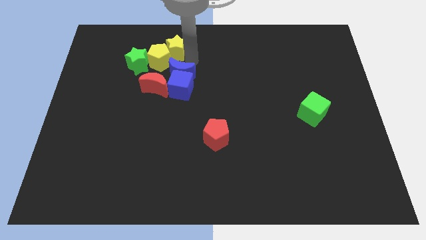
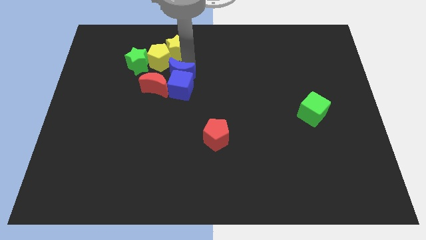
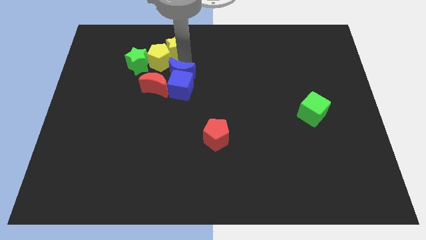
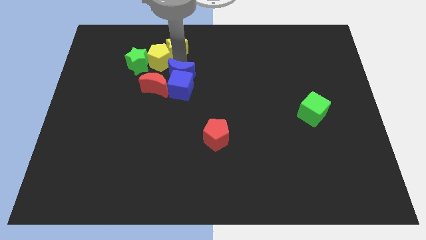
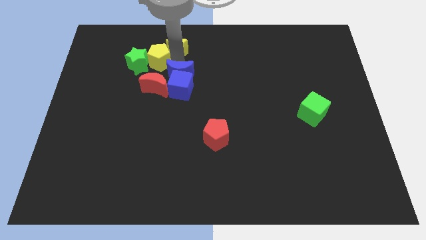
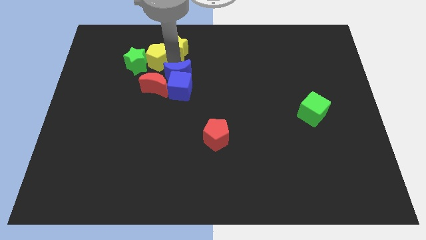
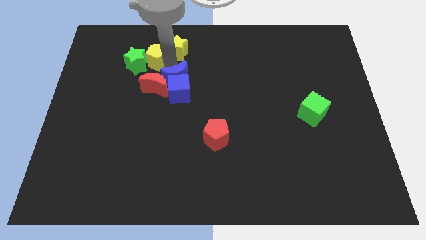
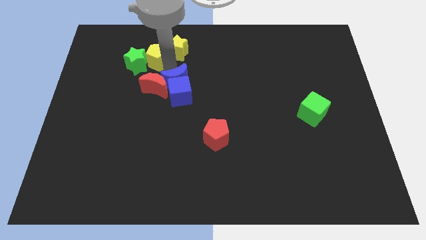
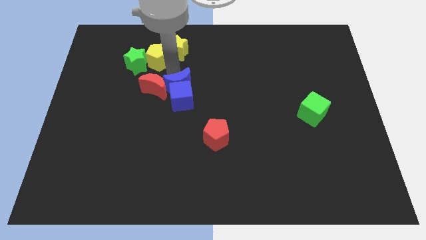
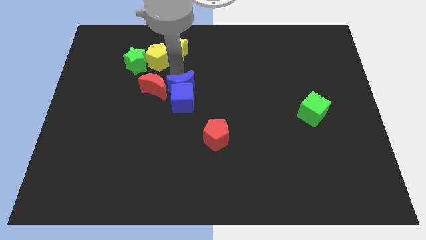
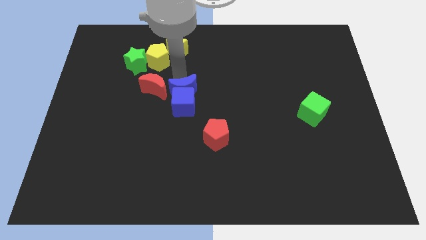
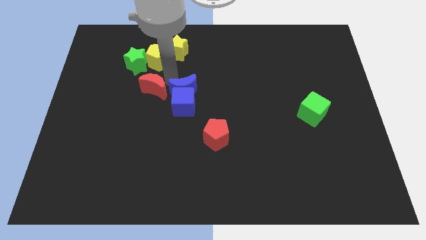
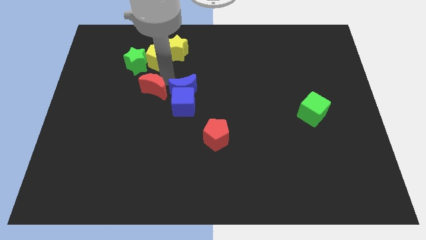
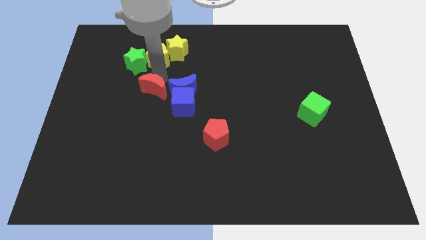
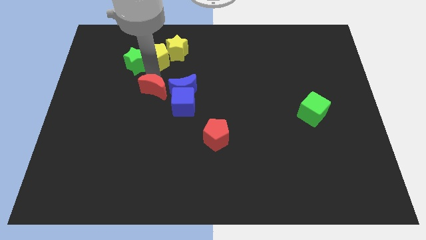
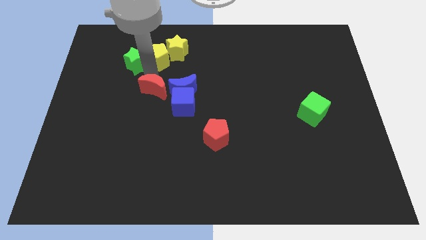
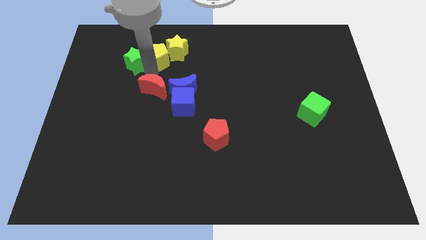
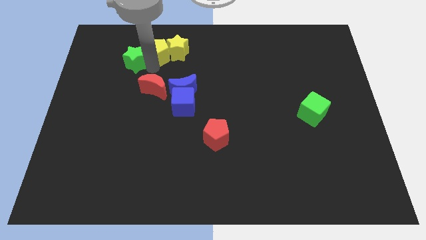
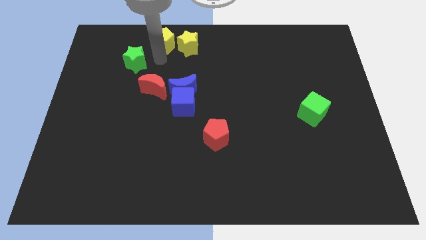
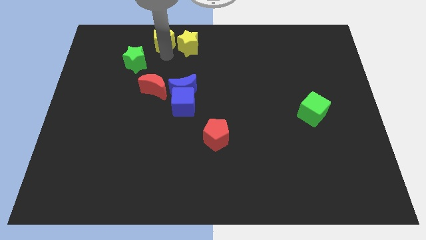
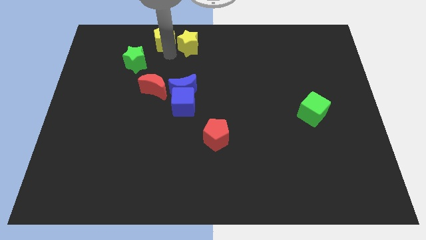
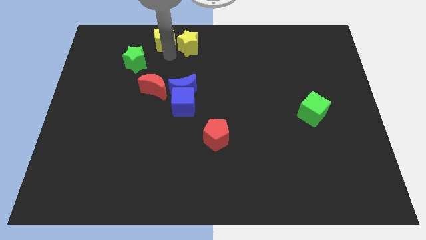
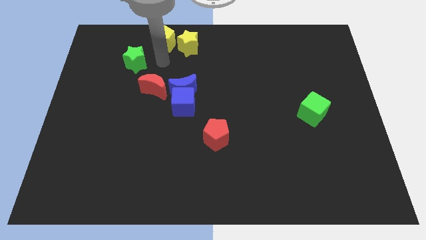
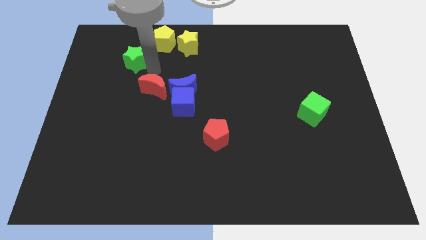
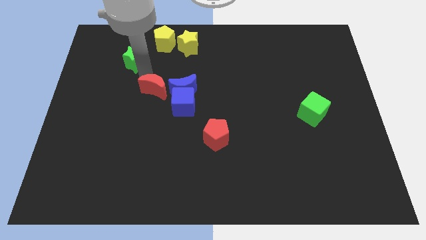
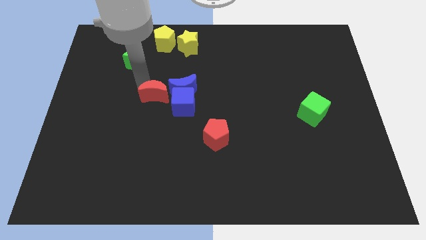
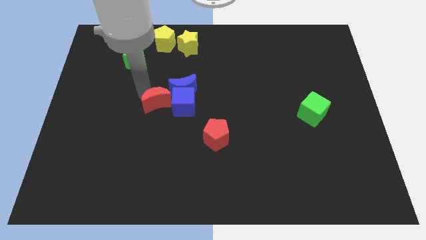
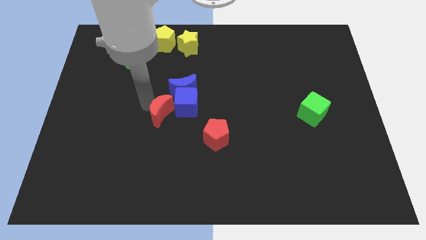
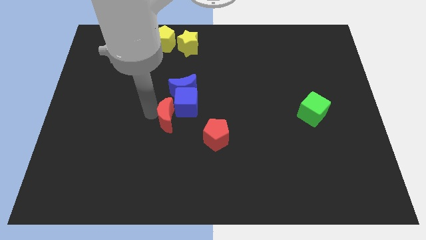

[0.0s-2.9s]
separate the yellow and blue blocks

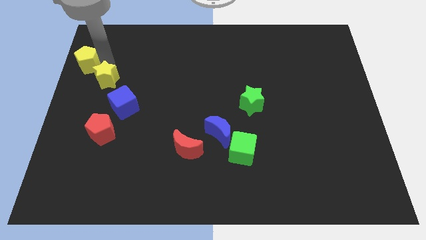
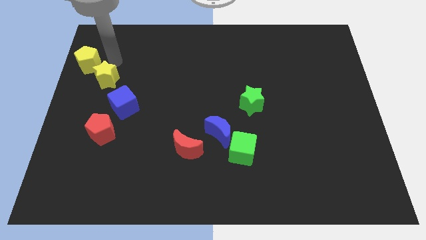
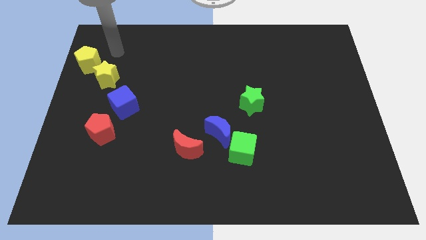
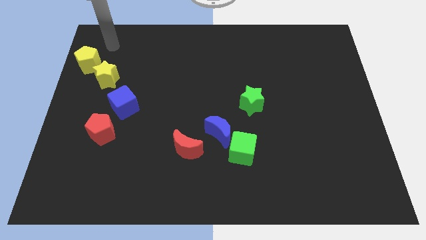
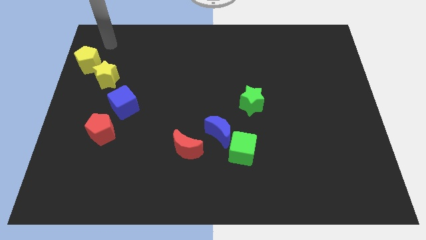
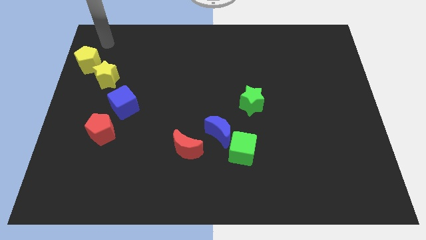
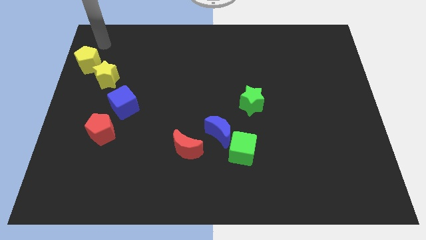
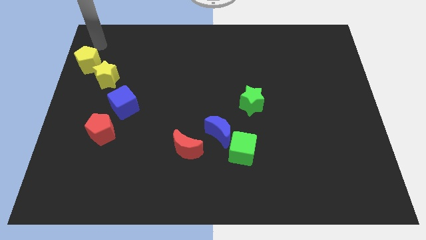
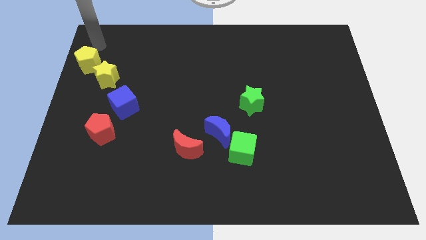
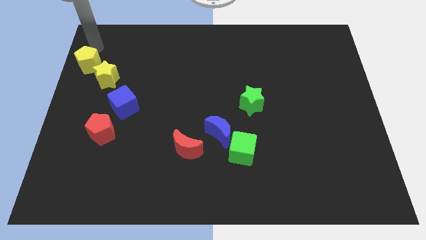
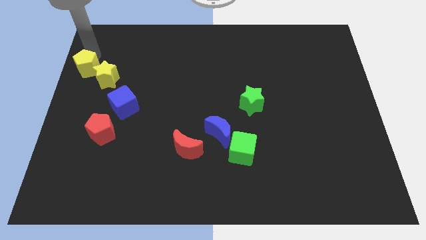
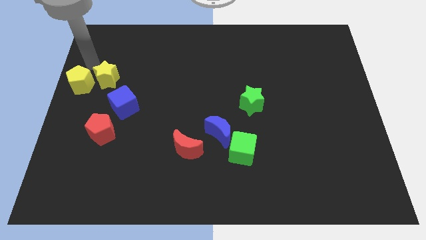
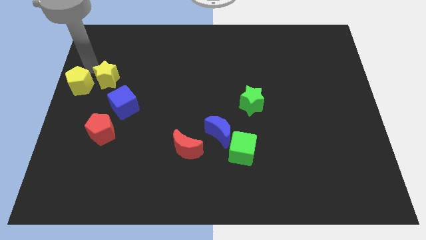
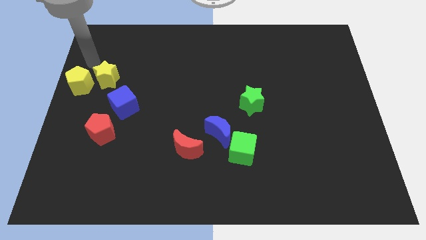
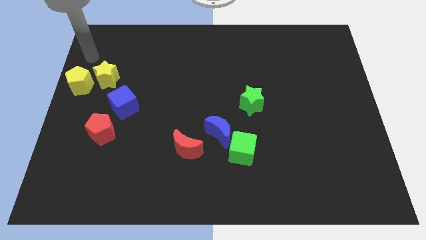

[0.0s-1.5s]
place the yellow pentagon to the left side of yellow star

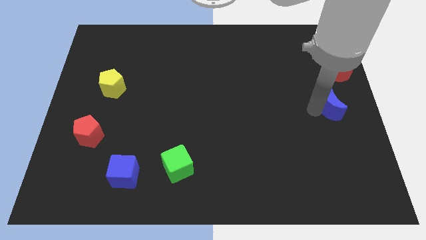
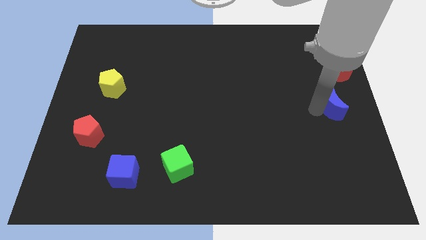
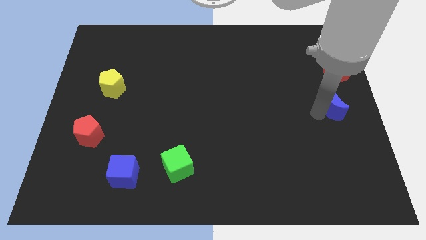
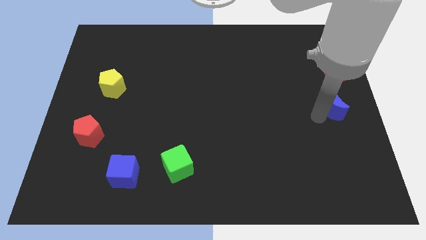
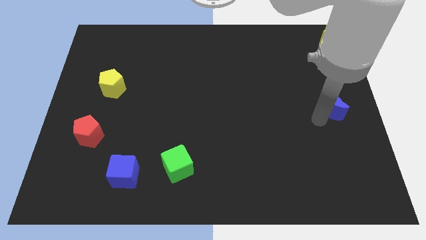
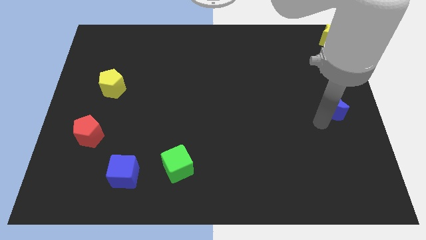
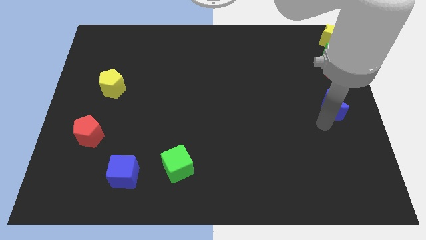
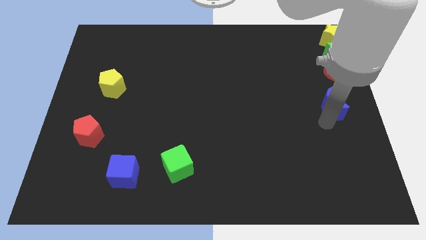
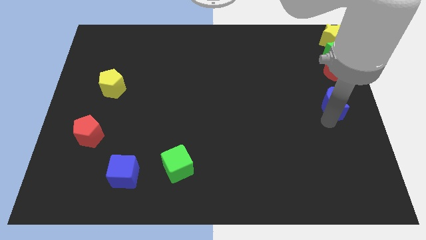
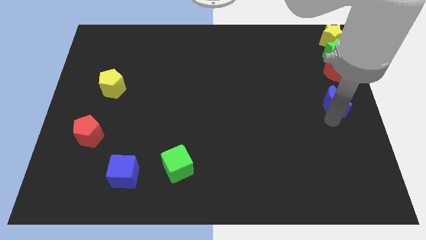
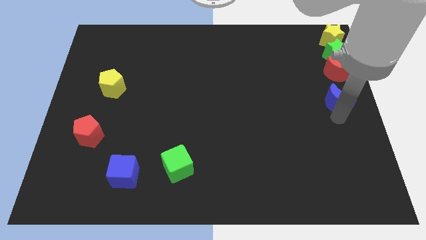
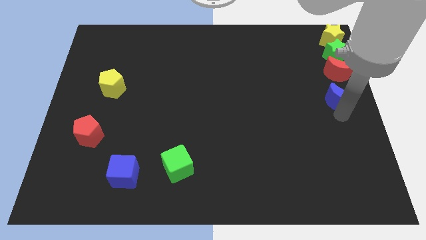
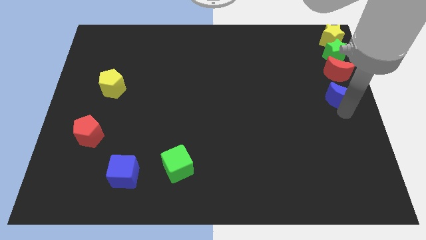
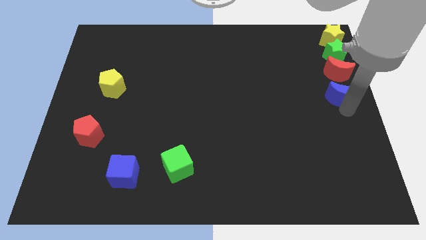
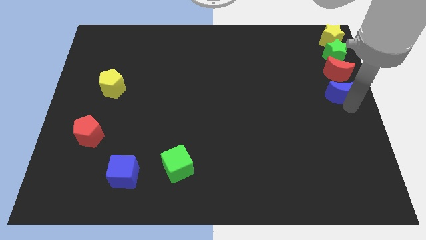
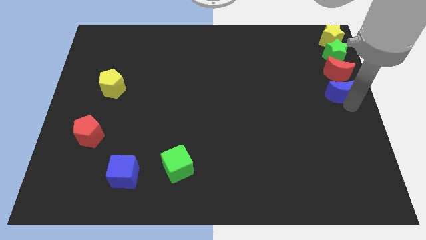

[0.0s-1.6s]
move blue moon below red moon

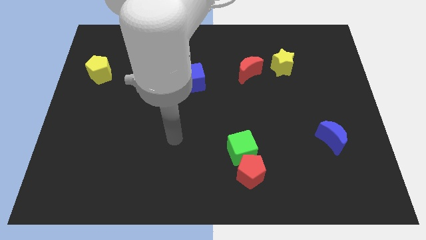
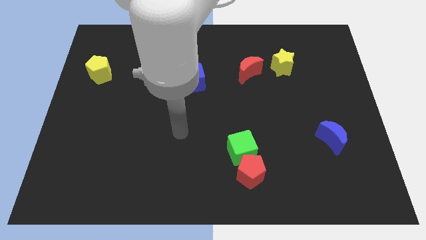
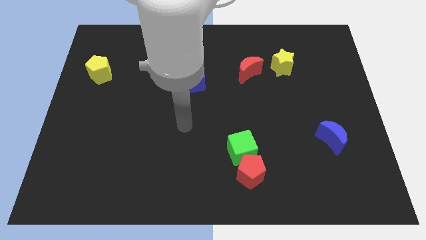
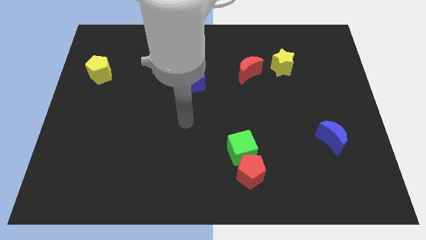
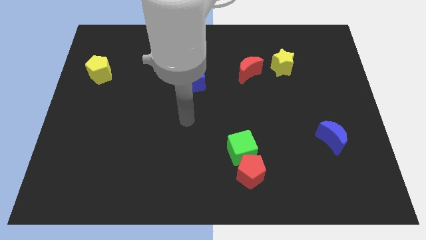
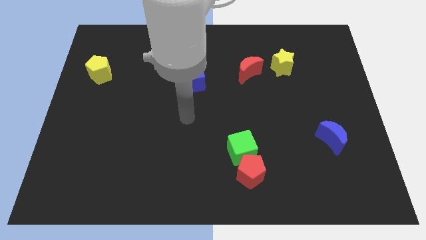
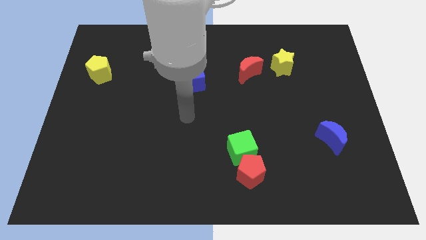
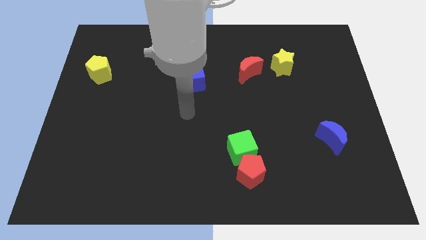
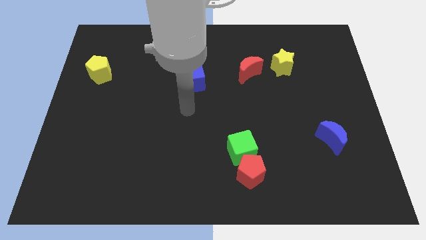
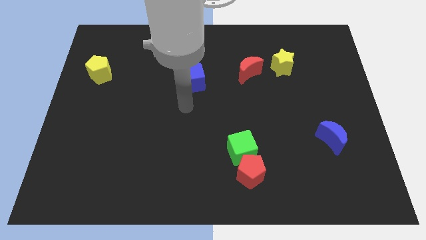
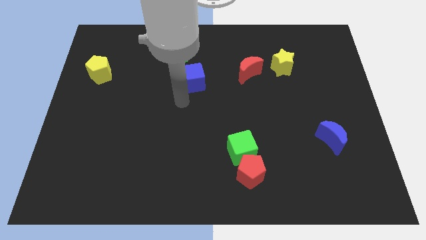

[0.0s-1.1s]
slide your arm to the bottom left of blue cube

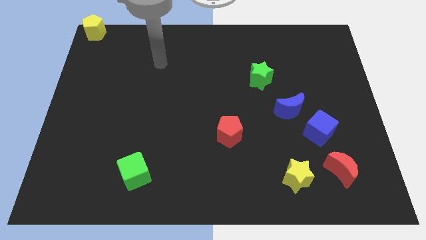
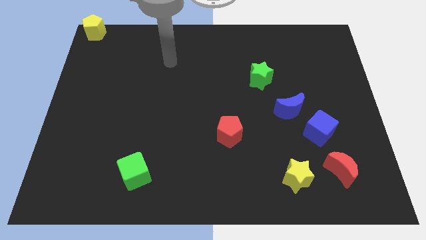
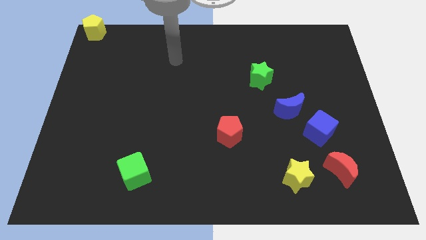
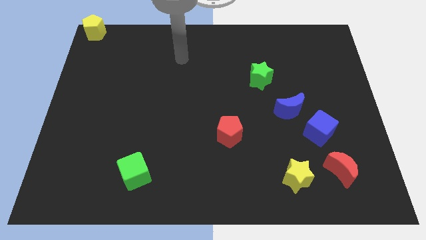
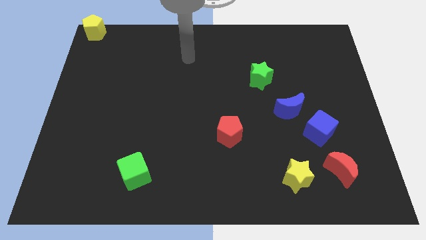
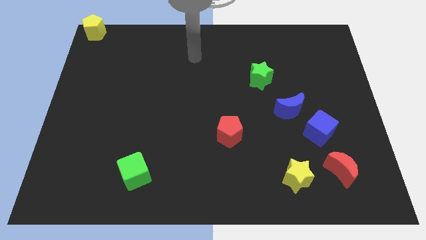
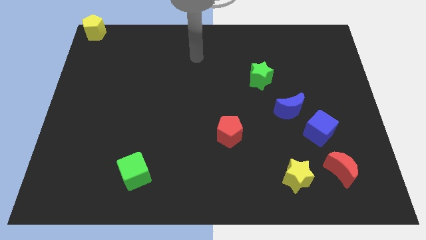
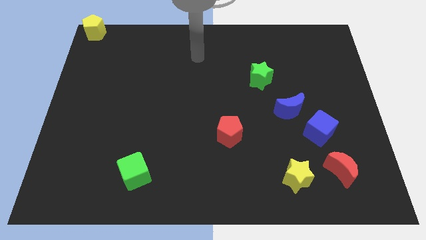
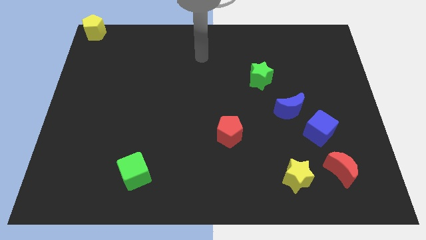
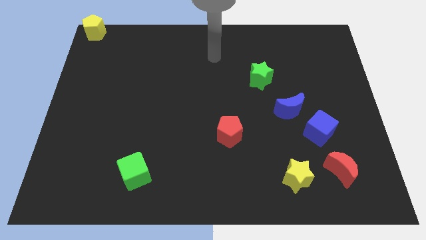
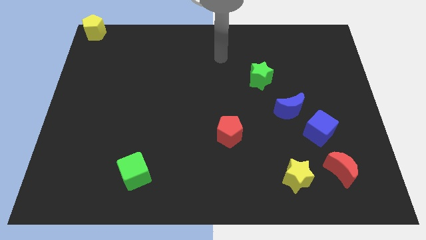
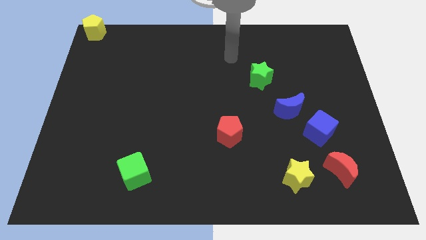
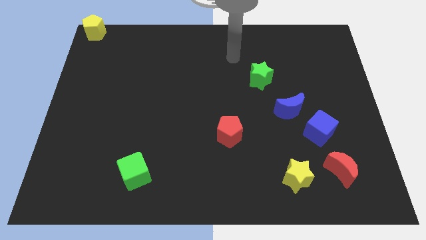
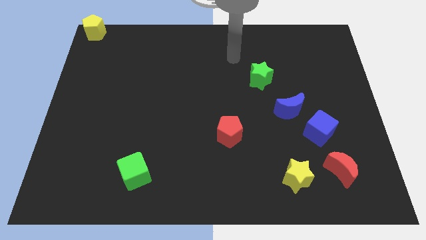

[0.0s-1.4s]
move your arm towards the green star

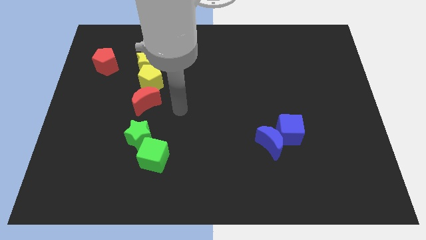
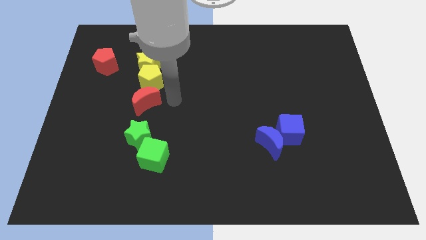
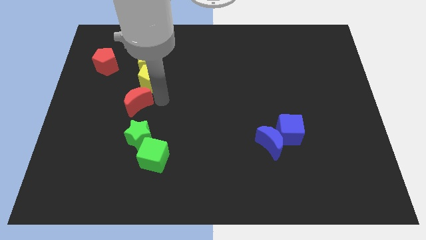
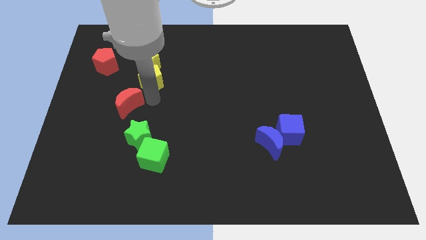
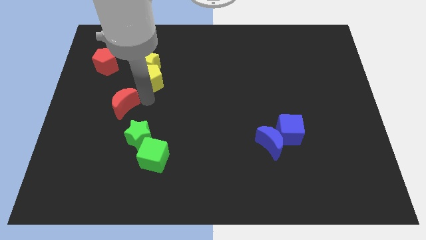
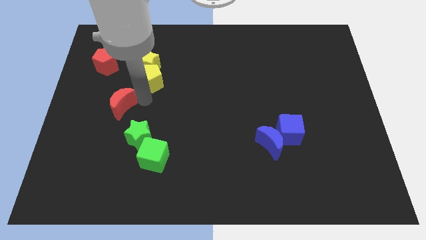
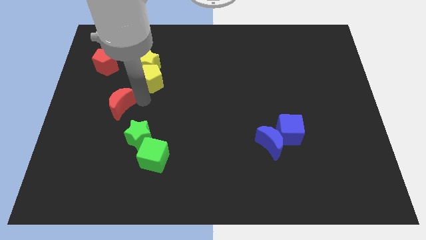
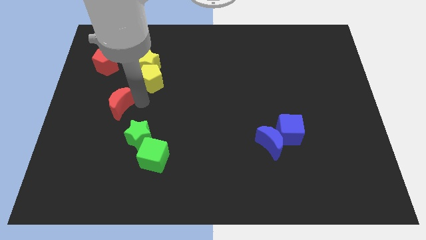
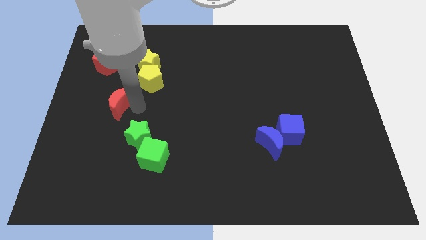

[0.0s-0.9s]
push your arm in between red crescent and yellow pentagon
